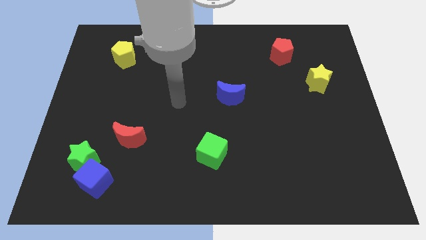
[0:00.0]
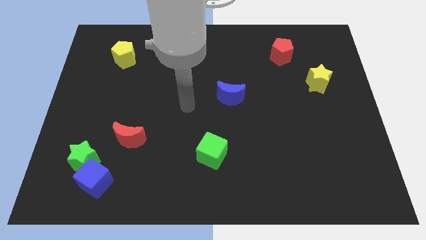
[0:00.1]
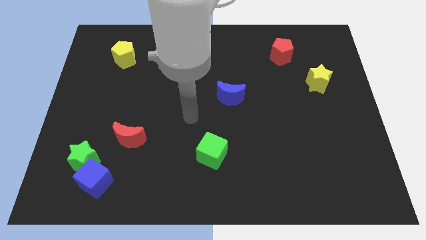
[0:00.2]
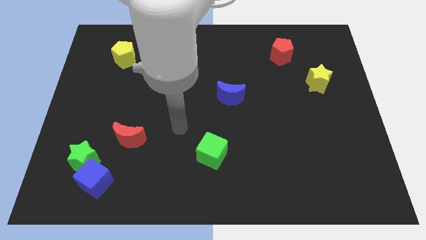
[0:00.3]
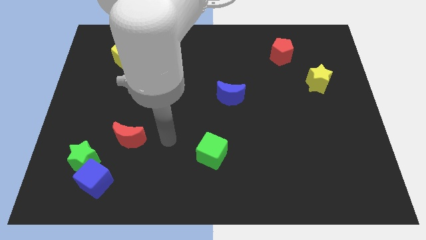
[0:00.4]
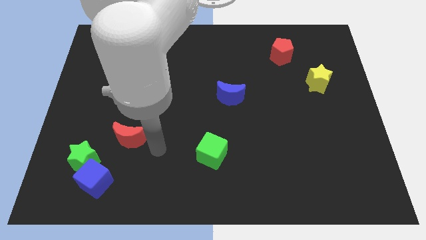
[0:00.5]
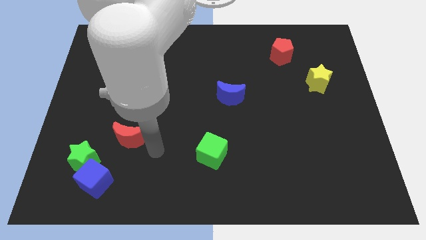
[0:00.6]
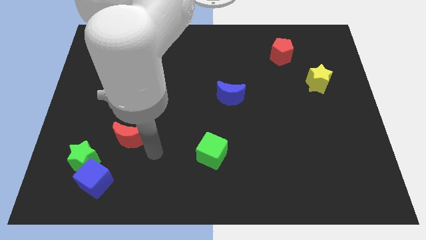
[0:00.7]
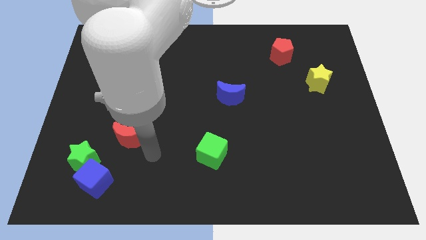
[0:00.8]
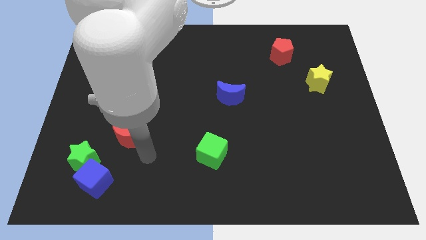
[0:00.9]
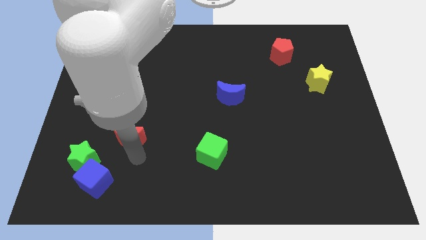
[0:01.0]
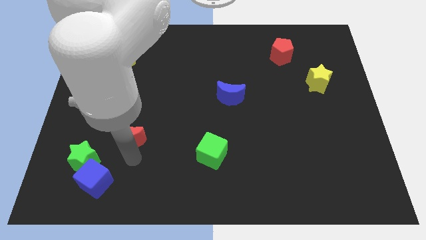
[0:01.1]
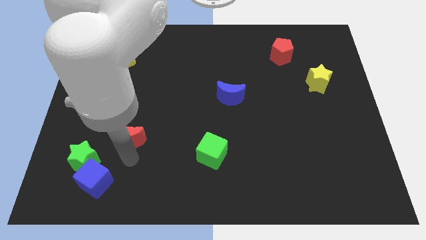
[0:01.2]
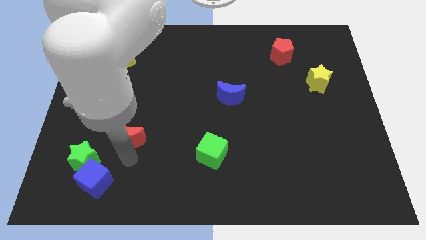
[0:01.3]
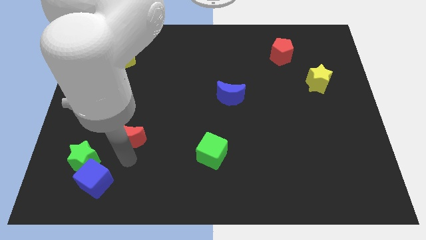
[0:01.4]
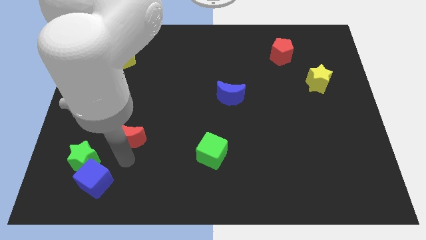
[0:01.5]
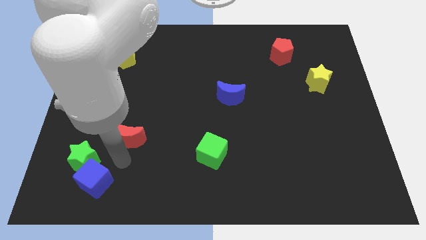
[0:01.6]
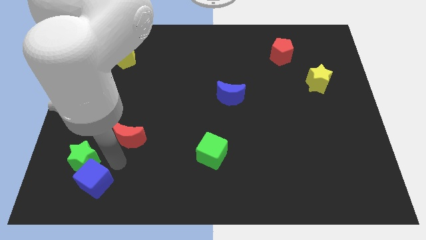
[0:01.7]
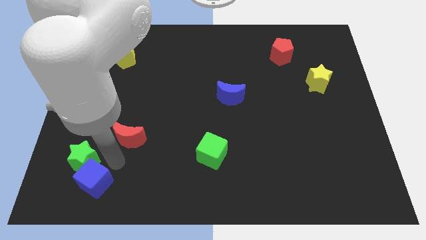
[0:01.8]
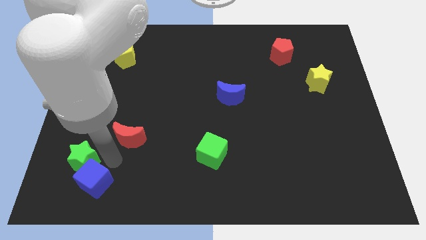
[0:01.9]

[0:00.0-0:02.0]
drag the arm below the red moon

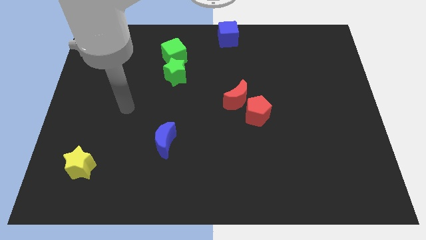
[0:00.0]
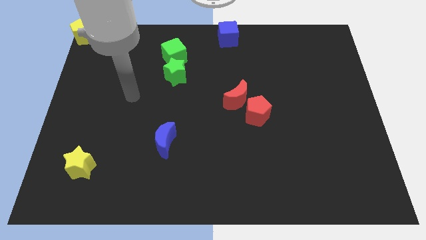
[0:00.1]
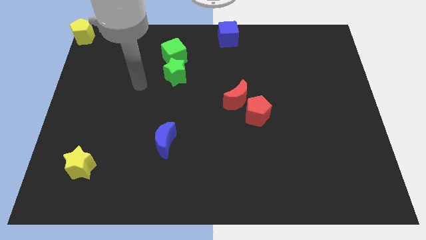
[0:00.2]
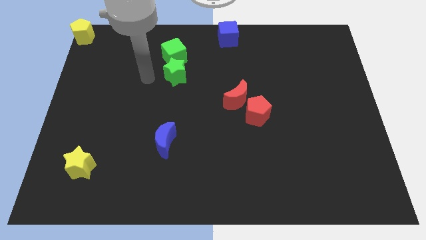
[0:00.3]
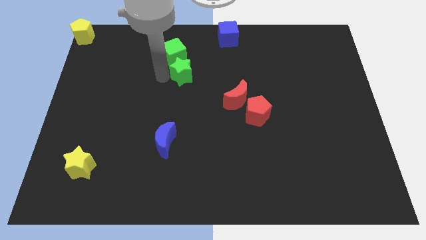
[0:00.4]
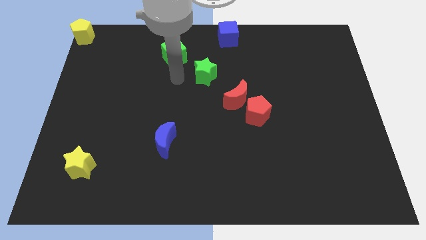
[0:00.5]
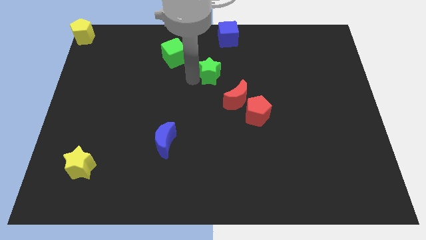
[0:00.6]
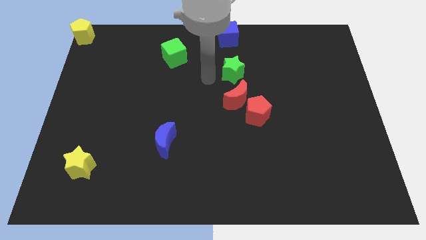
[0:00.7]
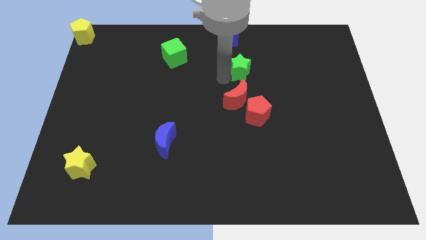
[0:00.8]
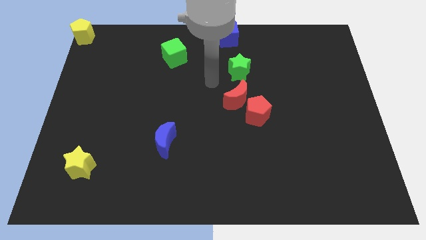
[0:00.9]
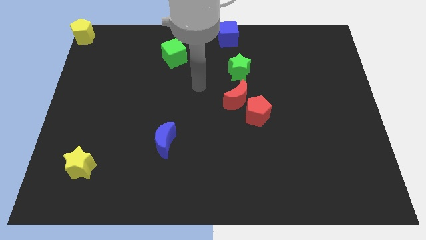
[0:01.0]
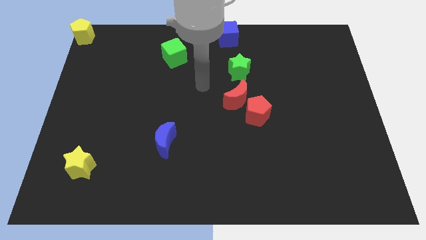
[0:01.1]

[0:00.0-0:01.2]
place the green star above the red crescent

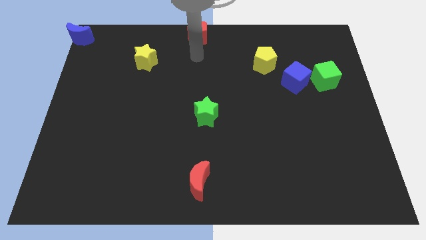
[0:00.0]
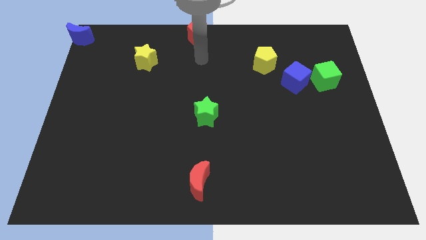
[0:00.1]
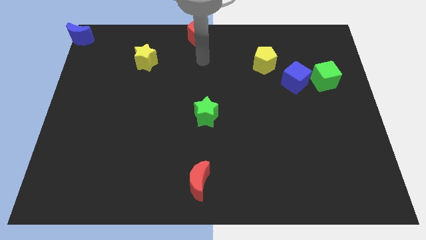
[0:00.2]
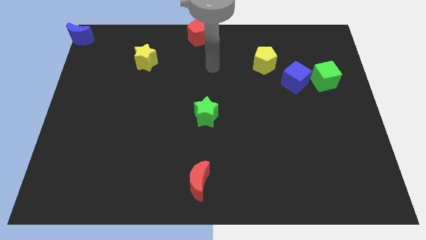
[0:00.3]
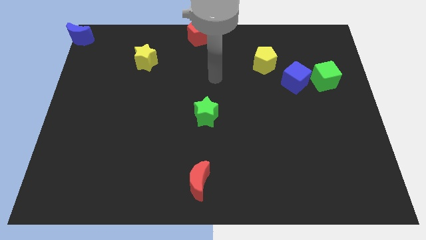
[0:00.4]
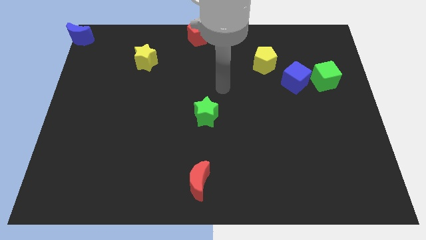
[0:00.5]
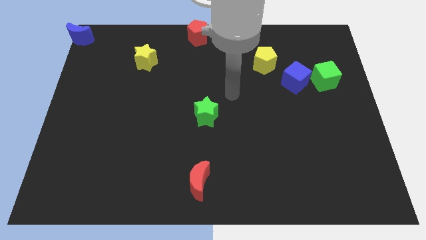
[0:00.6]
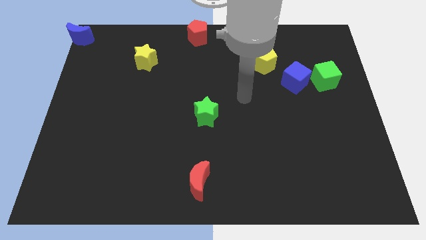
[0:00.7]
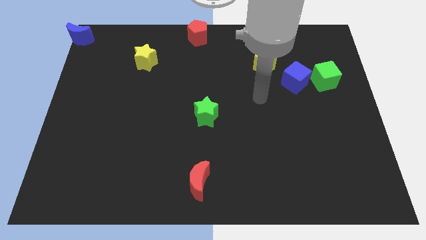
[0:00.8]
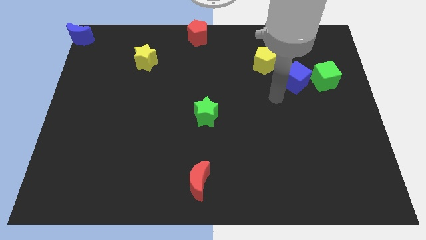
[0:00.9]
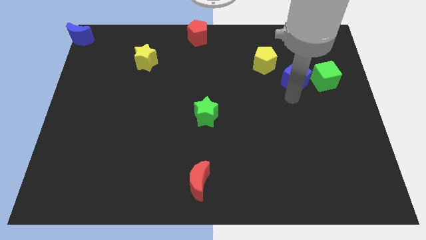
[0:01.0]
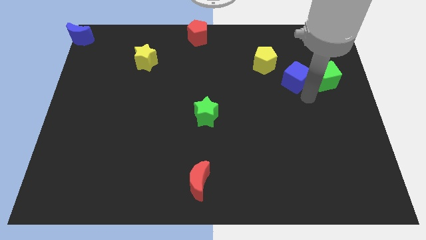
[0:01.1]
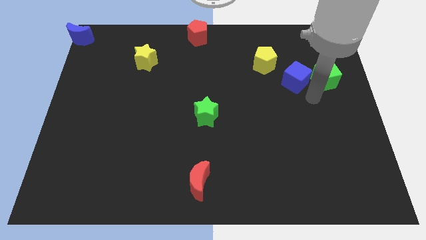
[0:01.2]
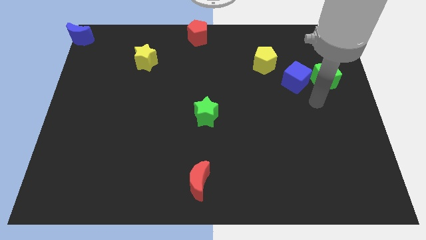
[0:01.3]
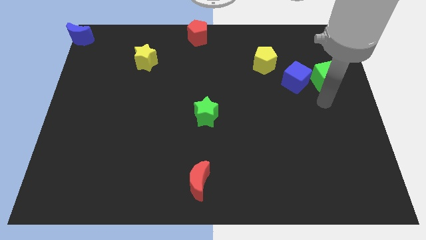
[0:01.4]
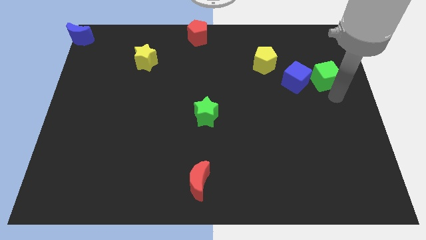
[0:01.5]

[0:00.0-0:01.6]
move your arm to the bottom of green cube

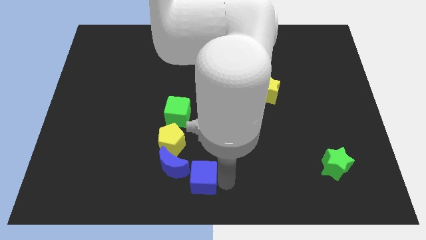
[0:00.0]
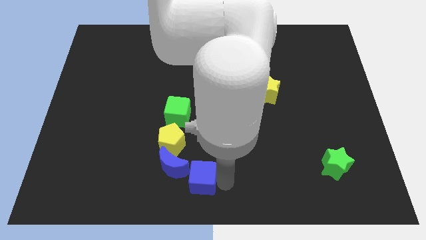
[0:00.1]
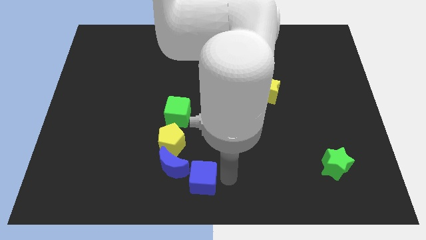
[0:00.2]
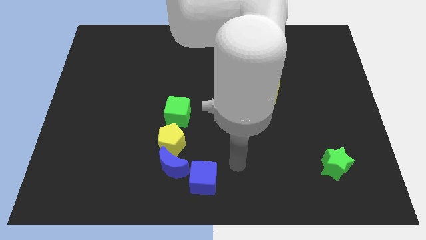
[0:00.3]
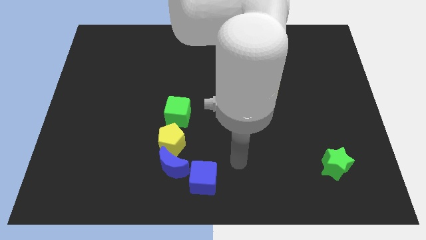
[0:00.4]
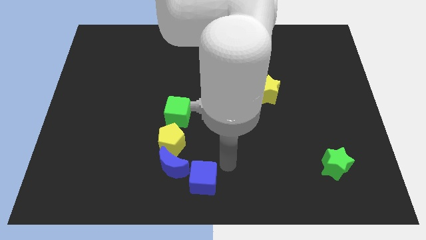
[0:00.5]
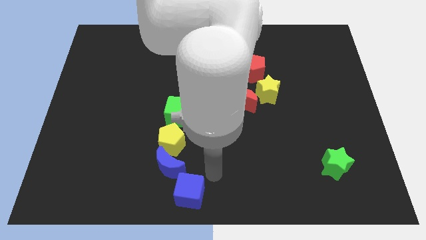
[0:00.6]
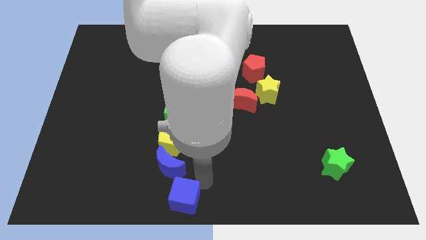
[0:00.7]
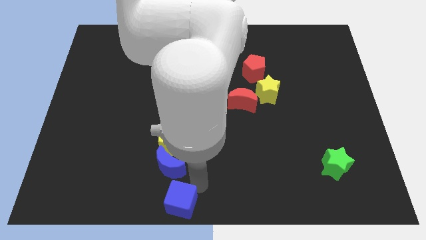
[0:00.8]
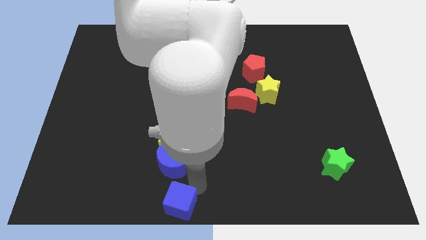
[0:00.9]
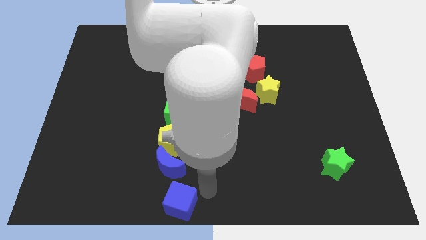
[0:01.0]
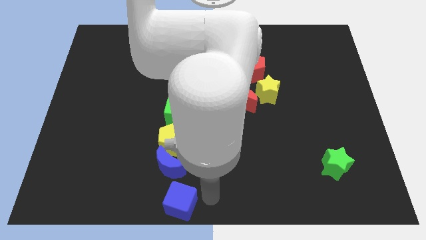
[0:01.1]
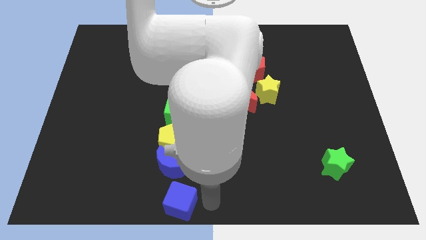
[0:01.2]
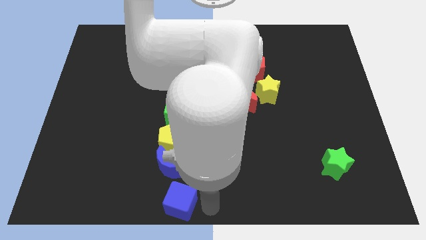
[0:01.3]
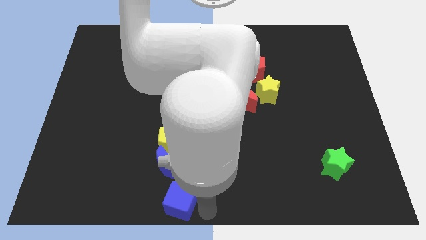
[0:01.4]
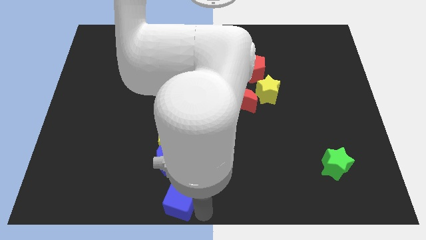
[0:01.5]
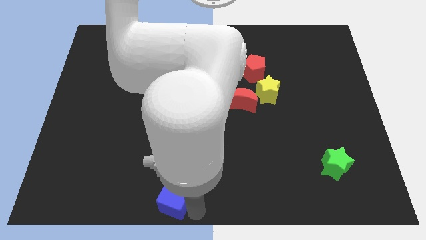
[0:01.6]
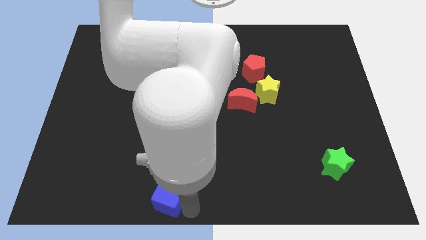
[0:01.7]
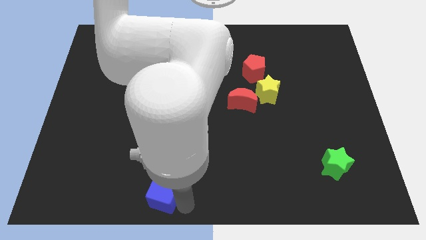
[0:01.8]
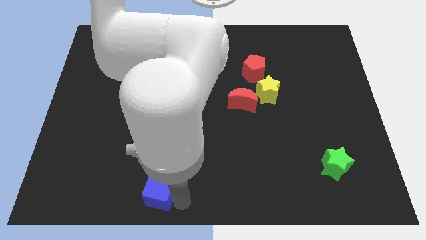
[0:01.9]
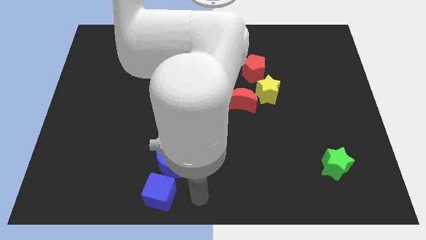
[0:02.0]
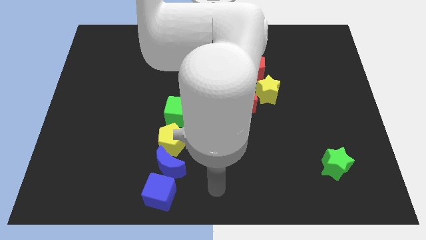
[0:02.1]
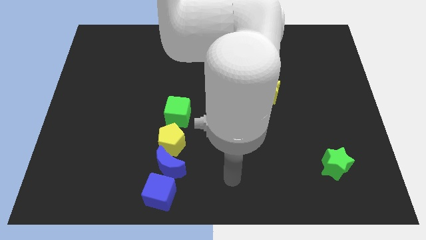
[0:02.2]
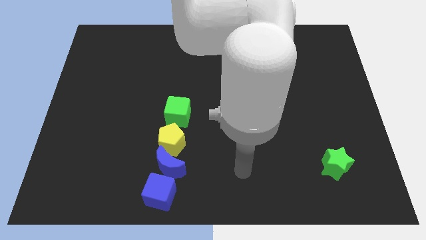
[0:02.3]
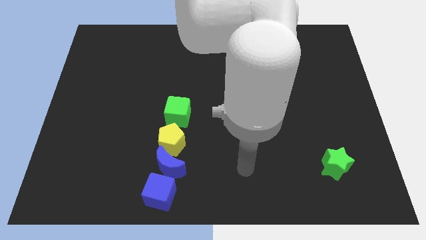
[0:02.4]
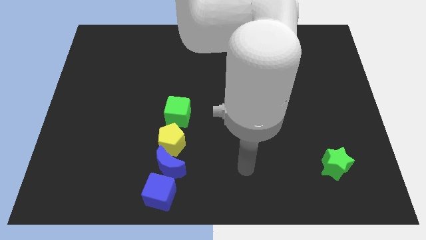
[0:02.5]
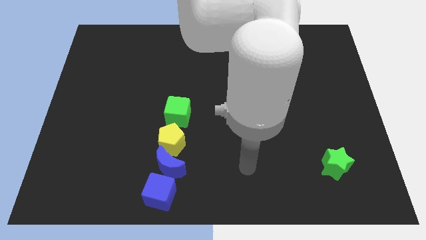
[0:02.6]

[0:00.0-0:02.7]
put the blue cube at the bottom of blue moon

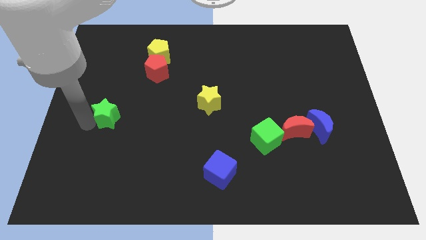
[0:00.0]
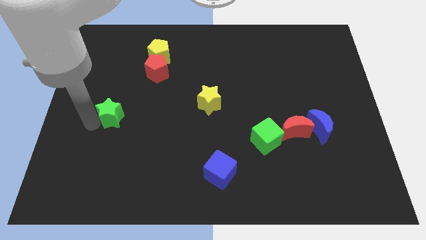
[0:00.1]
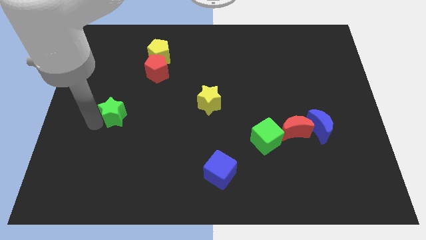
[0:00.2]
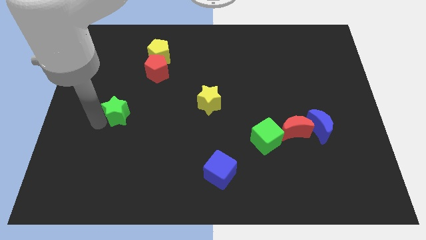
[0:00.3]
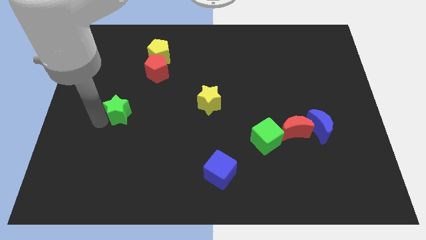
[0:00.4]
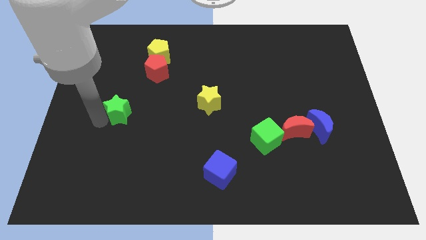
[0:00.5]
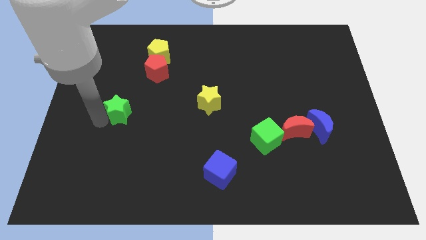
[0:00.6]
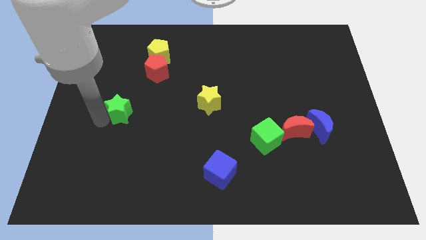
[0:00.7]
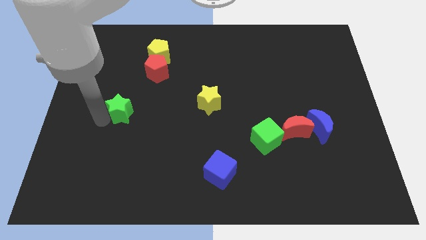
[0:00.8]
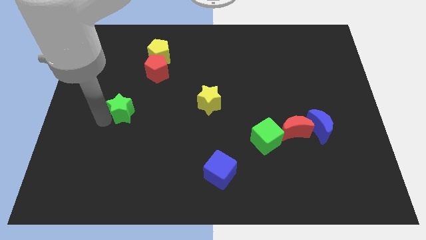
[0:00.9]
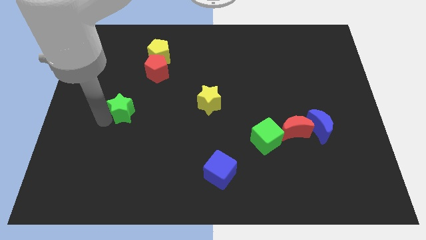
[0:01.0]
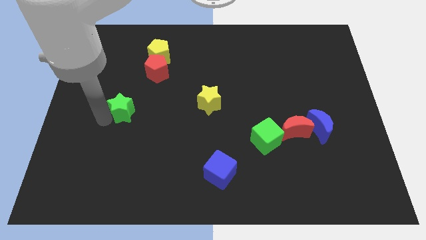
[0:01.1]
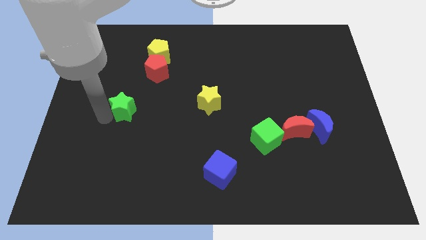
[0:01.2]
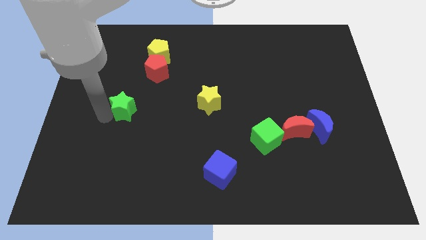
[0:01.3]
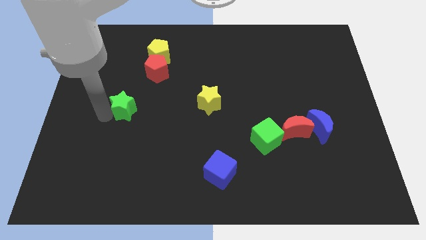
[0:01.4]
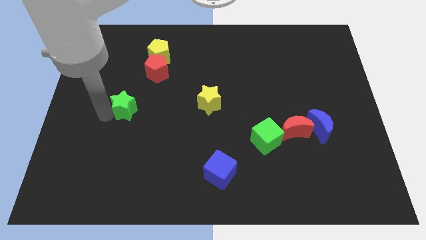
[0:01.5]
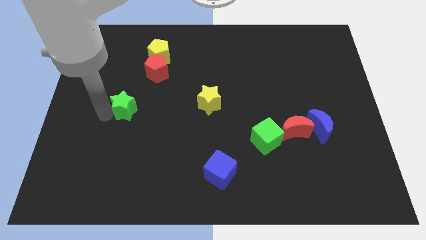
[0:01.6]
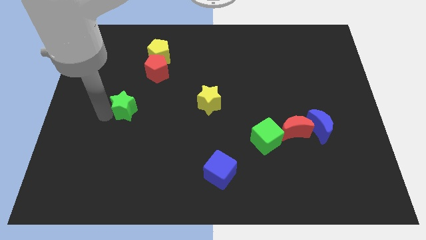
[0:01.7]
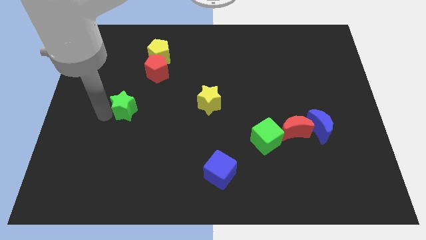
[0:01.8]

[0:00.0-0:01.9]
move the green star to the right of the board
